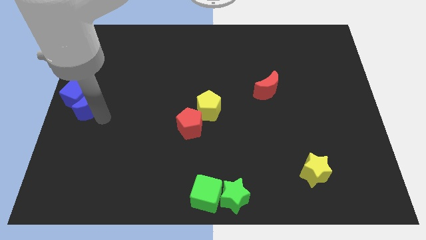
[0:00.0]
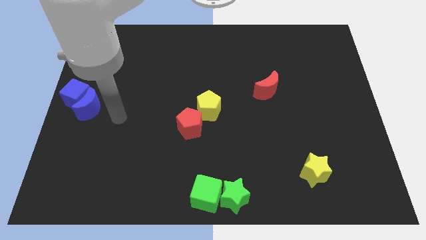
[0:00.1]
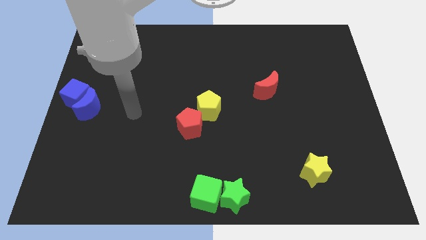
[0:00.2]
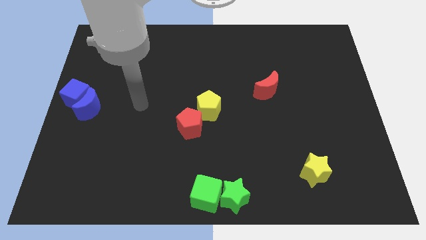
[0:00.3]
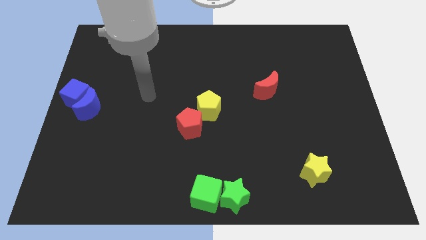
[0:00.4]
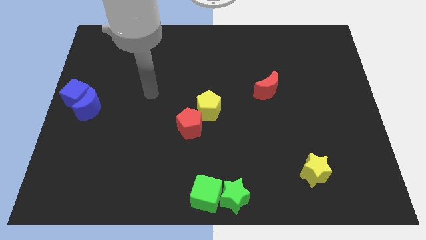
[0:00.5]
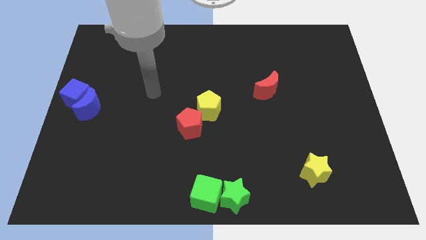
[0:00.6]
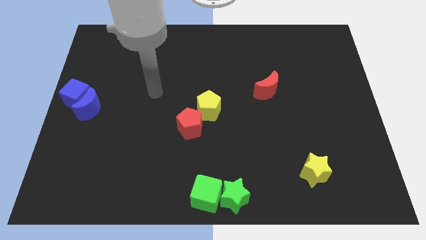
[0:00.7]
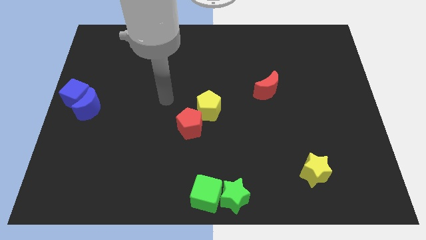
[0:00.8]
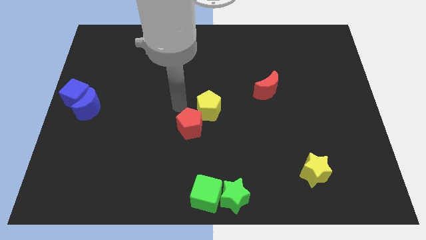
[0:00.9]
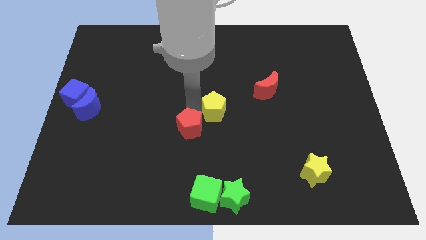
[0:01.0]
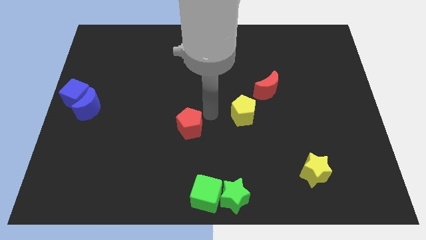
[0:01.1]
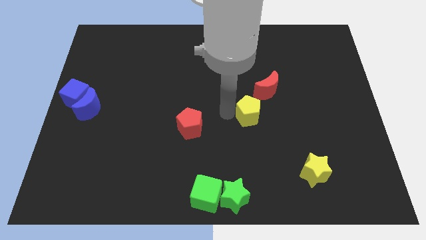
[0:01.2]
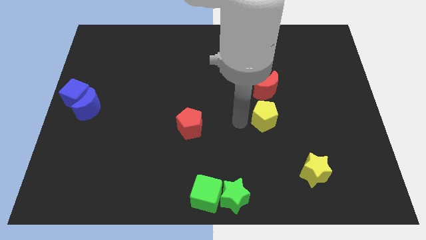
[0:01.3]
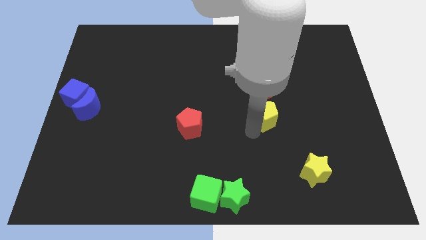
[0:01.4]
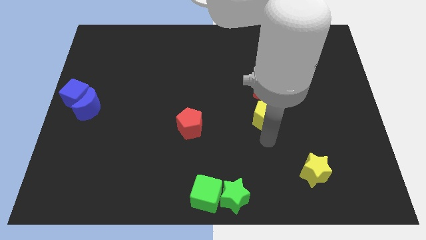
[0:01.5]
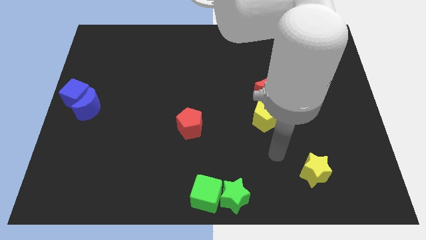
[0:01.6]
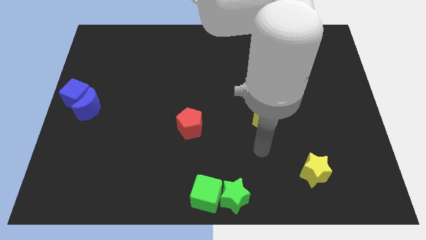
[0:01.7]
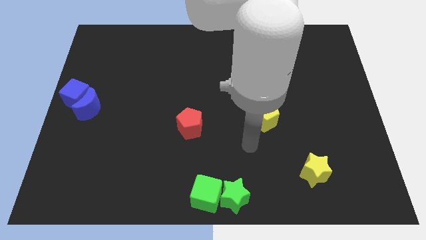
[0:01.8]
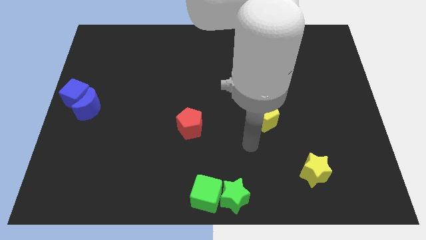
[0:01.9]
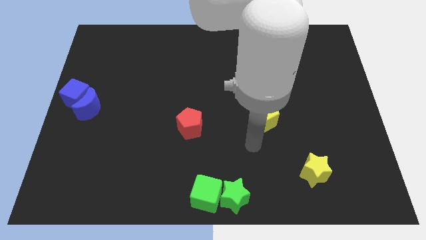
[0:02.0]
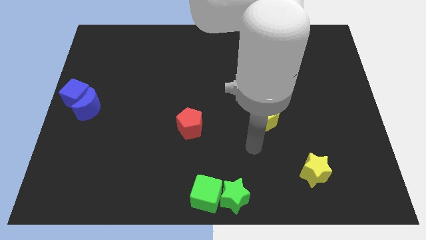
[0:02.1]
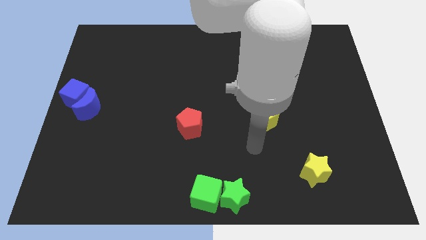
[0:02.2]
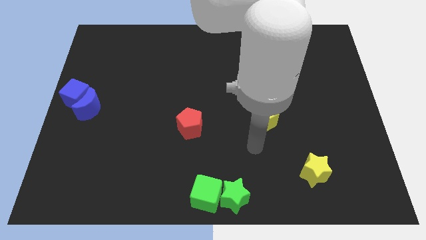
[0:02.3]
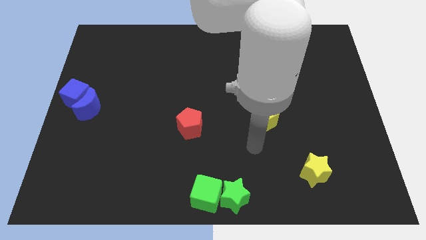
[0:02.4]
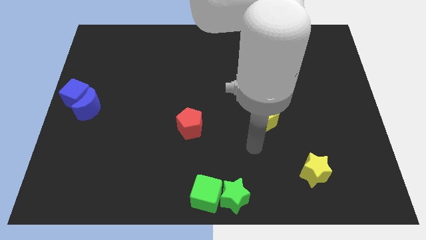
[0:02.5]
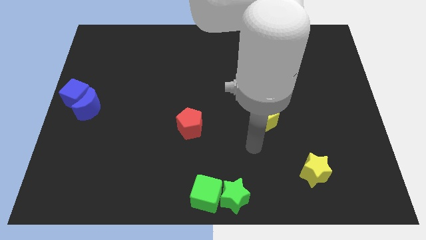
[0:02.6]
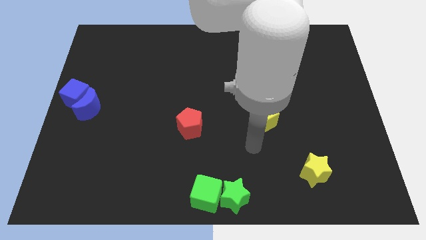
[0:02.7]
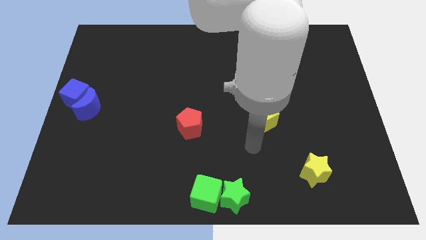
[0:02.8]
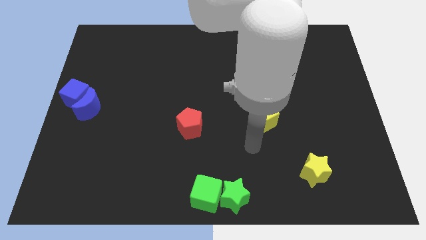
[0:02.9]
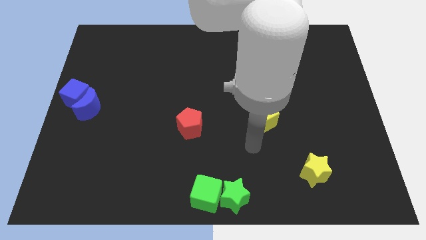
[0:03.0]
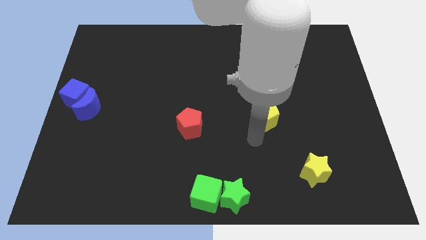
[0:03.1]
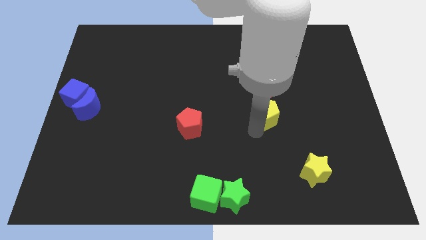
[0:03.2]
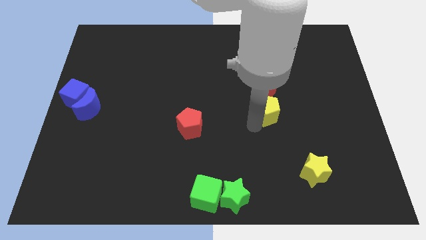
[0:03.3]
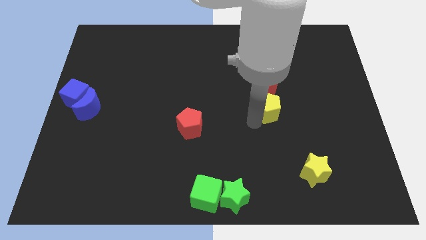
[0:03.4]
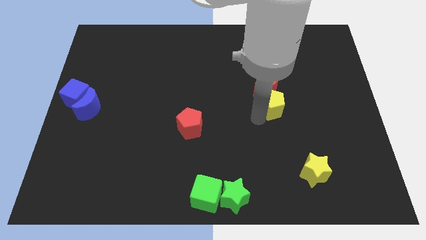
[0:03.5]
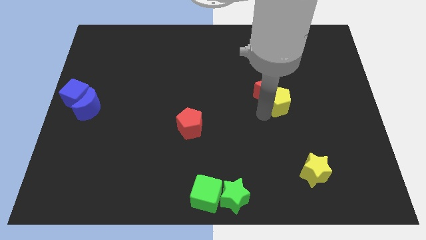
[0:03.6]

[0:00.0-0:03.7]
place the yellow pentagon under the red crescent

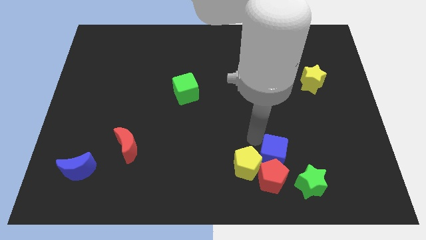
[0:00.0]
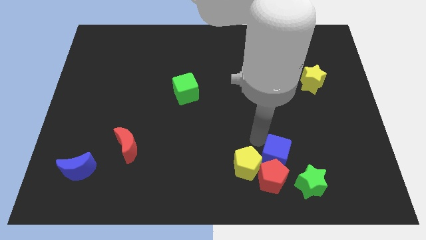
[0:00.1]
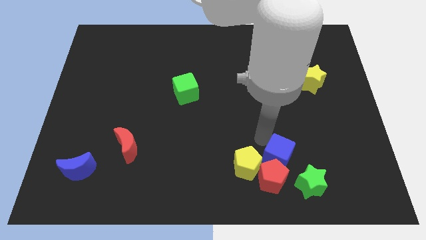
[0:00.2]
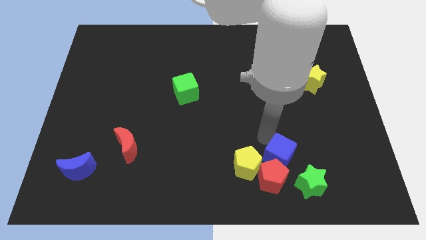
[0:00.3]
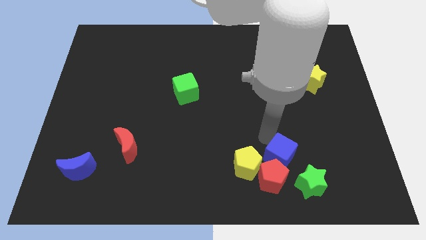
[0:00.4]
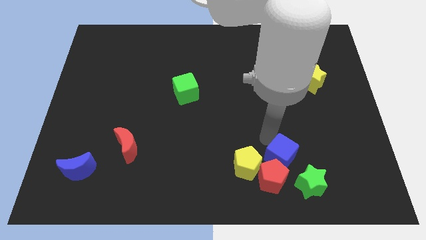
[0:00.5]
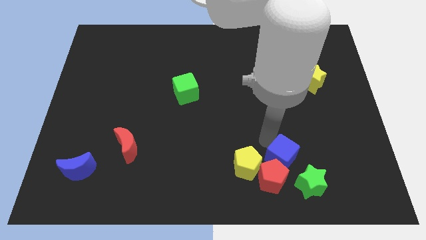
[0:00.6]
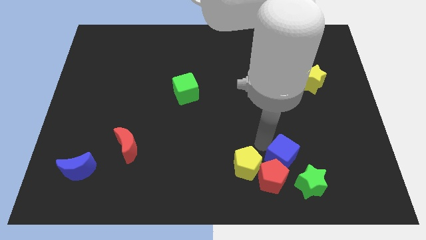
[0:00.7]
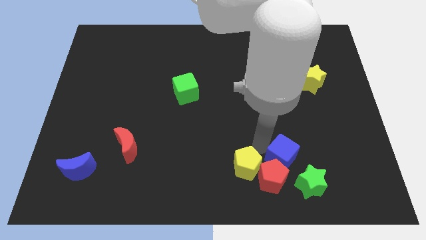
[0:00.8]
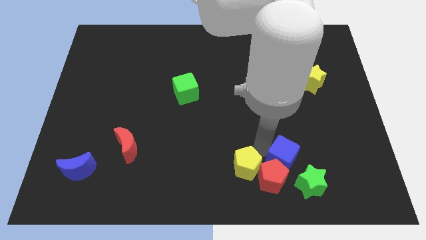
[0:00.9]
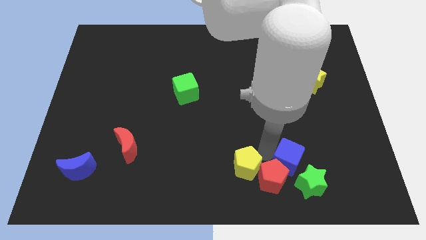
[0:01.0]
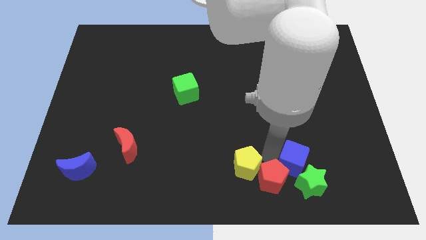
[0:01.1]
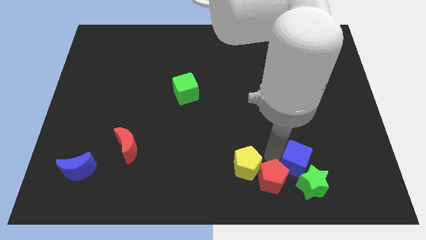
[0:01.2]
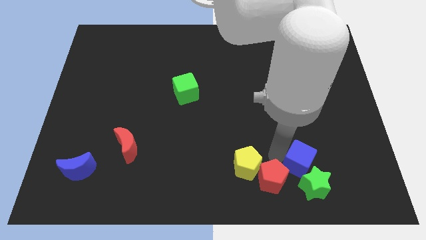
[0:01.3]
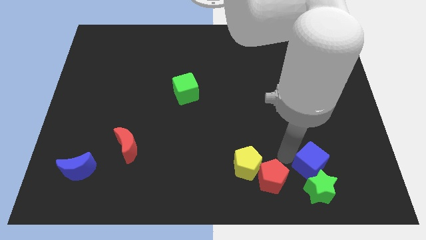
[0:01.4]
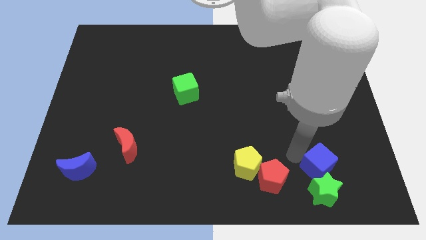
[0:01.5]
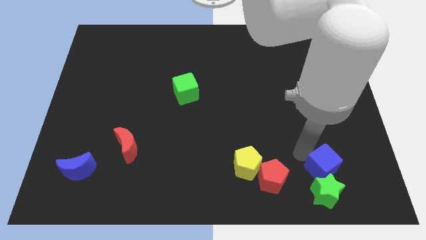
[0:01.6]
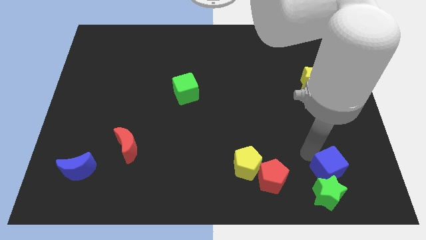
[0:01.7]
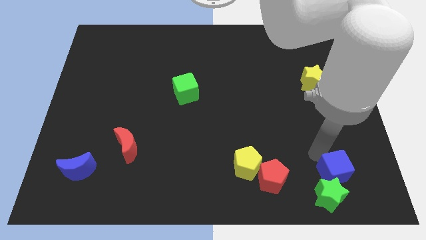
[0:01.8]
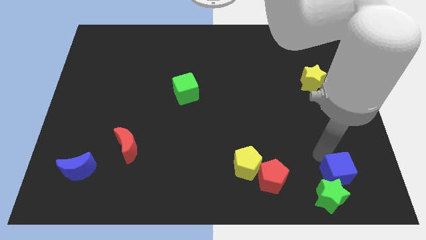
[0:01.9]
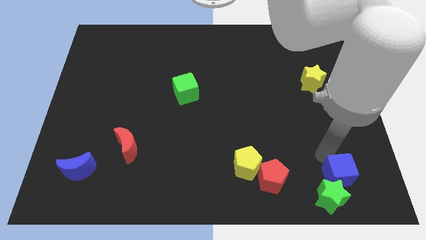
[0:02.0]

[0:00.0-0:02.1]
move the blue cube down

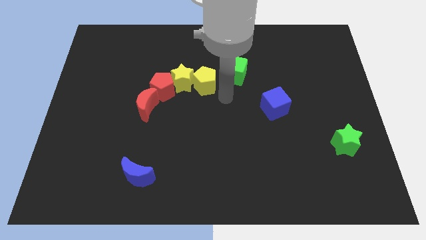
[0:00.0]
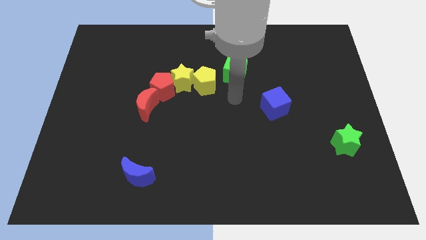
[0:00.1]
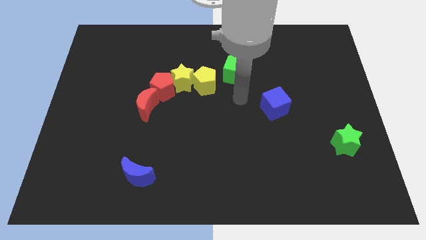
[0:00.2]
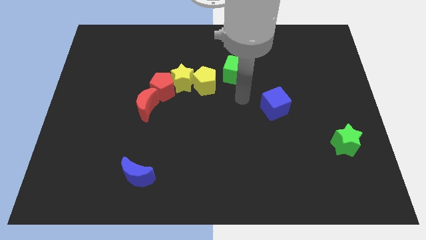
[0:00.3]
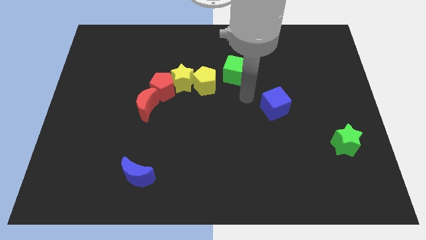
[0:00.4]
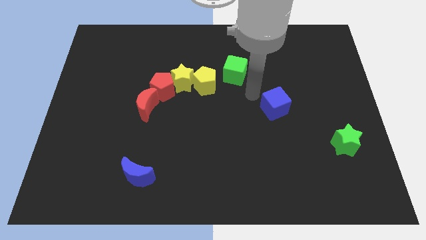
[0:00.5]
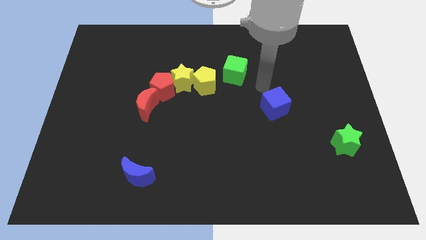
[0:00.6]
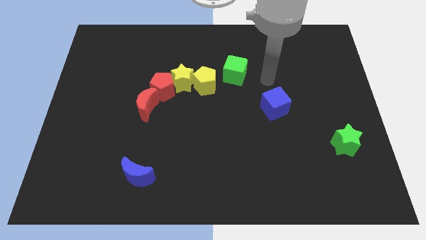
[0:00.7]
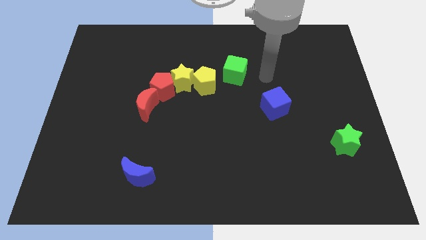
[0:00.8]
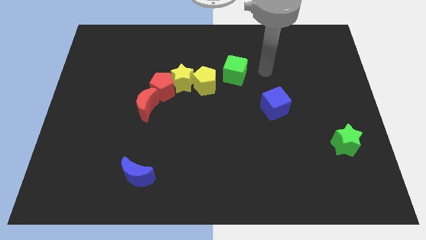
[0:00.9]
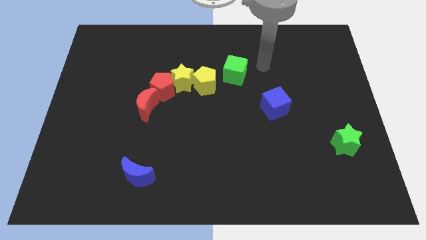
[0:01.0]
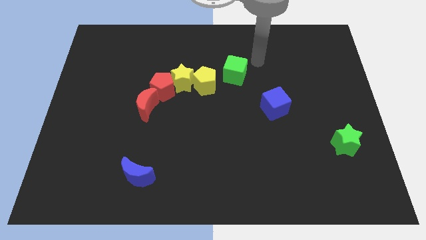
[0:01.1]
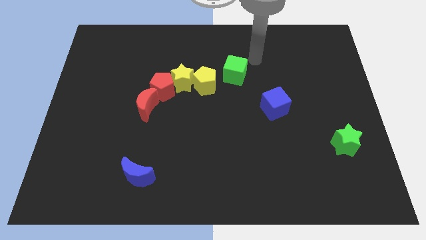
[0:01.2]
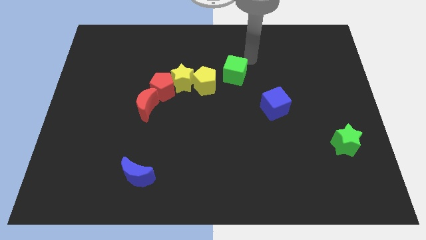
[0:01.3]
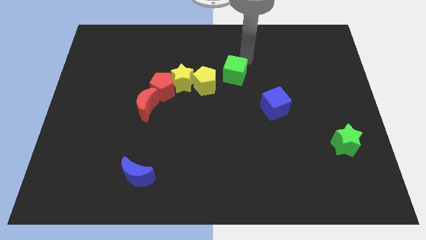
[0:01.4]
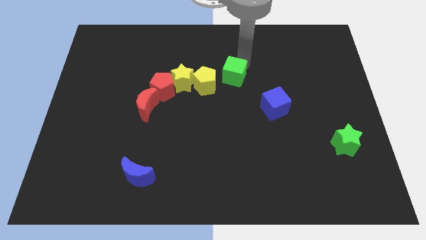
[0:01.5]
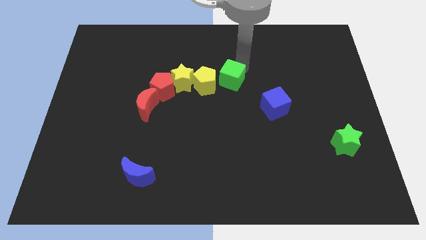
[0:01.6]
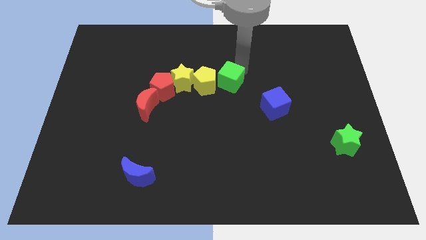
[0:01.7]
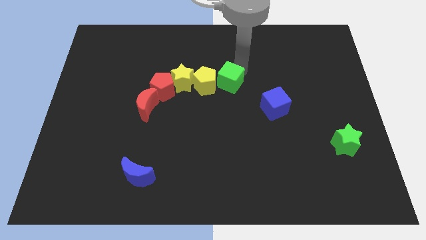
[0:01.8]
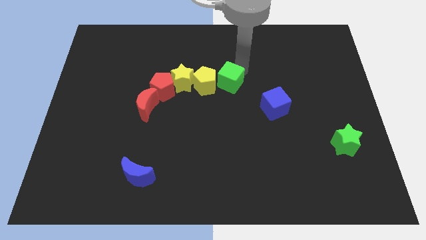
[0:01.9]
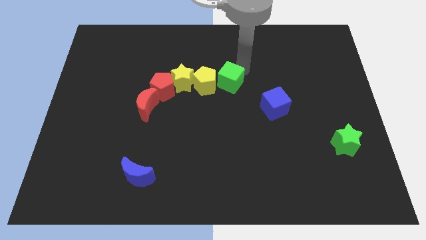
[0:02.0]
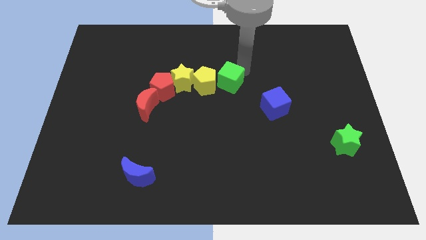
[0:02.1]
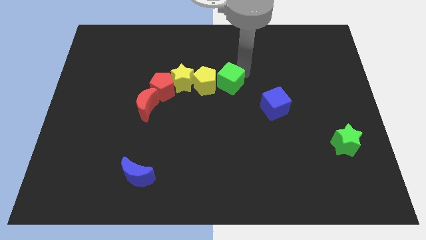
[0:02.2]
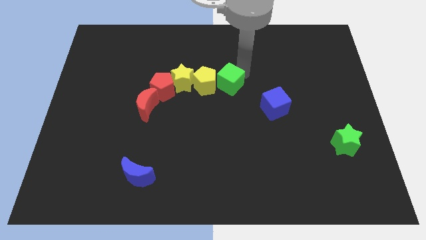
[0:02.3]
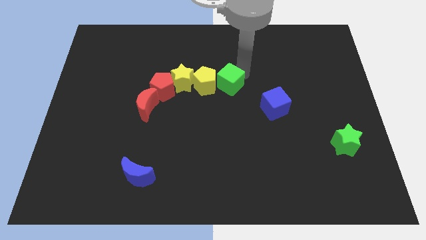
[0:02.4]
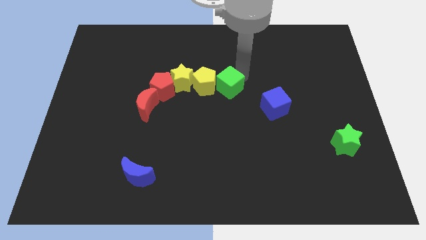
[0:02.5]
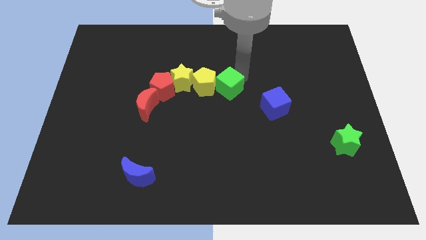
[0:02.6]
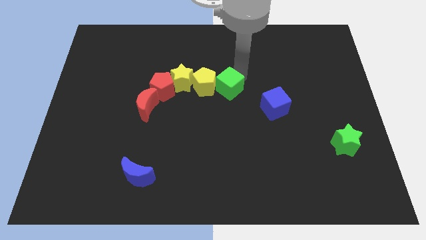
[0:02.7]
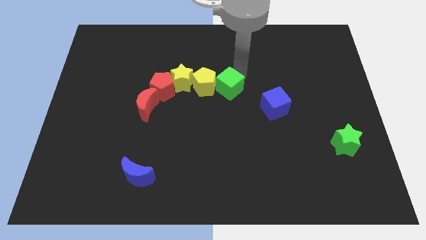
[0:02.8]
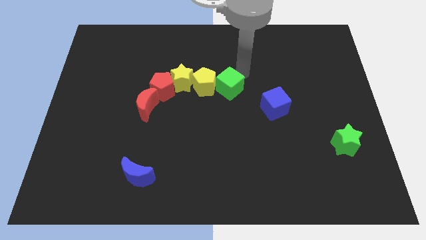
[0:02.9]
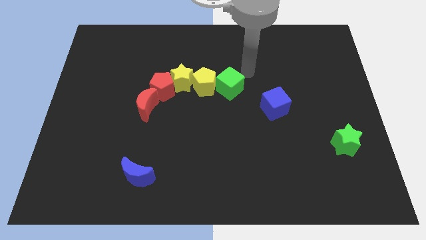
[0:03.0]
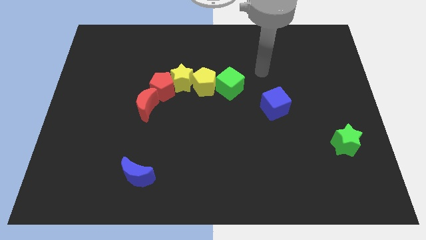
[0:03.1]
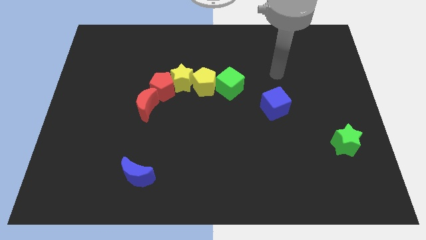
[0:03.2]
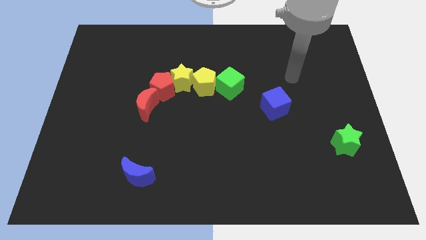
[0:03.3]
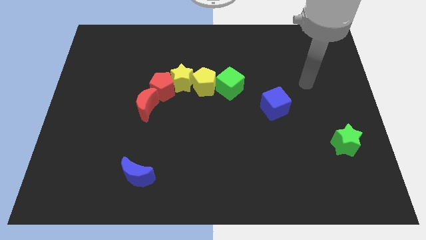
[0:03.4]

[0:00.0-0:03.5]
place the green cube close to the right of yellow pentagon
